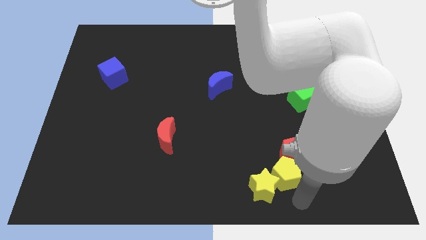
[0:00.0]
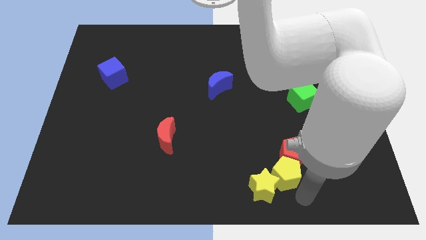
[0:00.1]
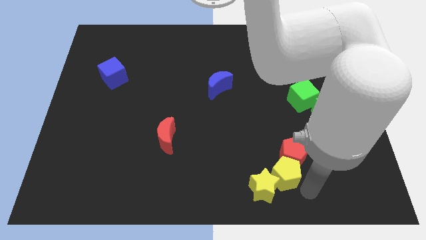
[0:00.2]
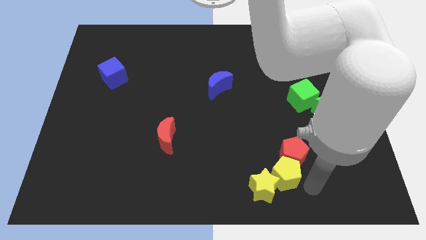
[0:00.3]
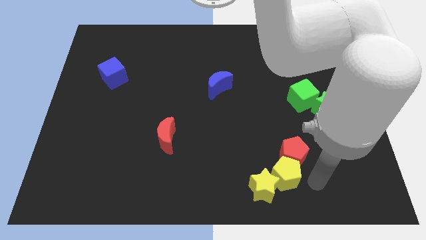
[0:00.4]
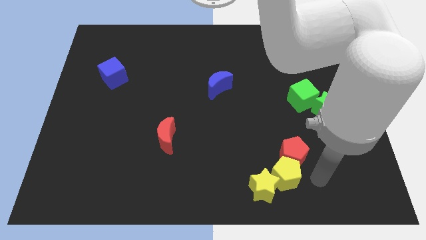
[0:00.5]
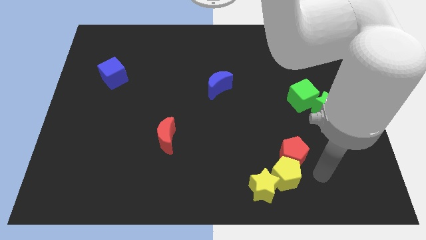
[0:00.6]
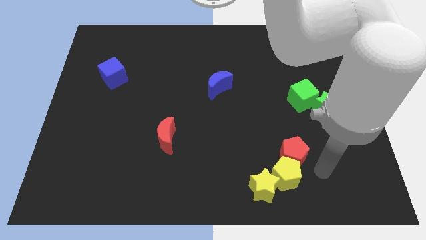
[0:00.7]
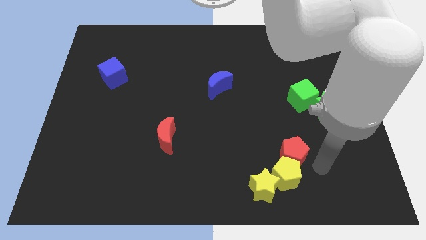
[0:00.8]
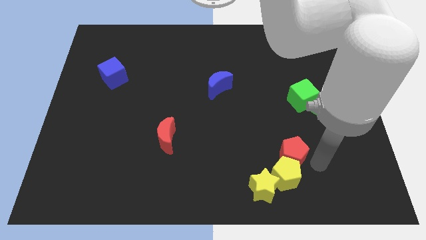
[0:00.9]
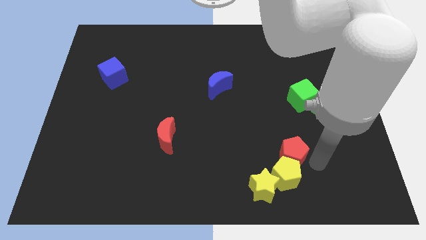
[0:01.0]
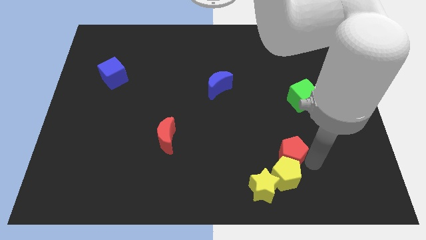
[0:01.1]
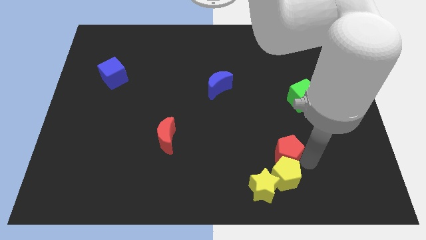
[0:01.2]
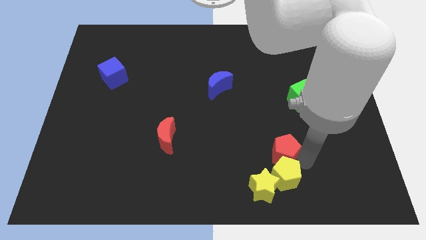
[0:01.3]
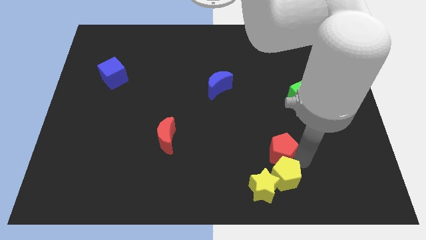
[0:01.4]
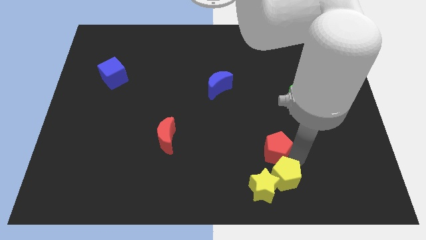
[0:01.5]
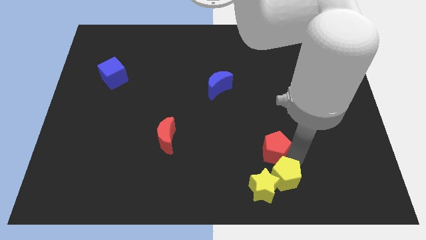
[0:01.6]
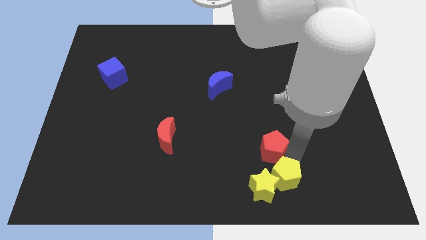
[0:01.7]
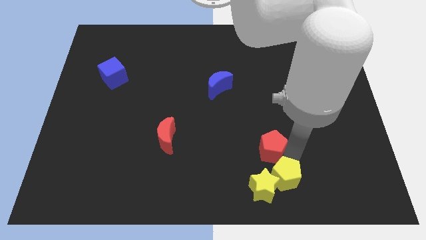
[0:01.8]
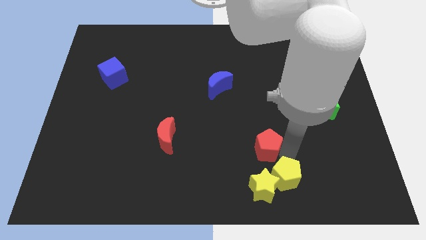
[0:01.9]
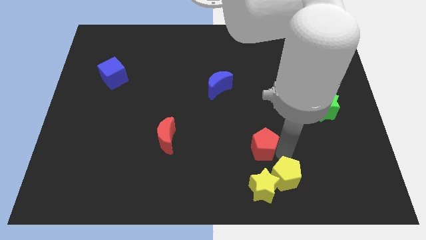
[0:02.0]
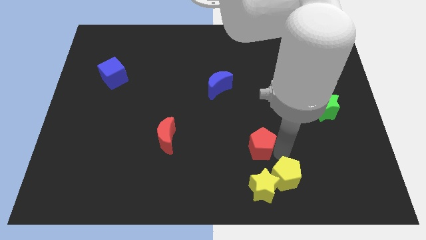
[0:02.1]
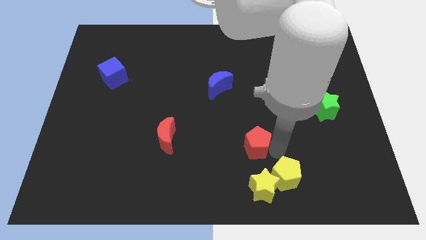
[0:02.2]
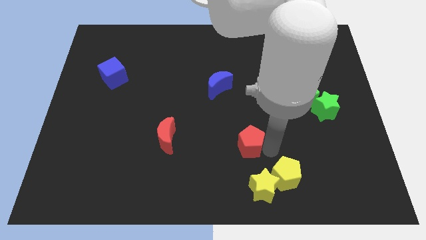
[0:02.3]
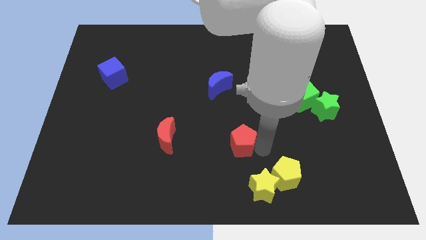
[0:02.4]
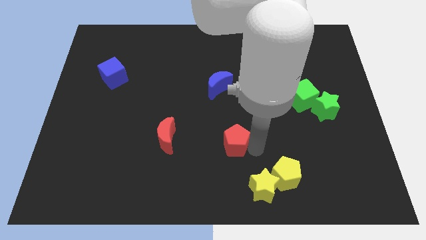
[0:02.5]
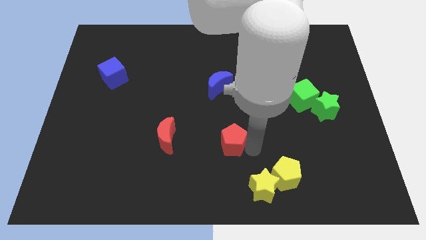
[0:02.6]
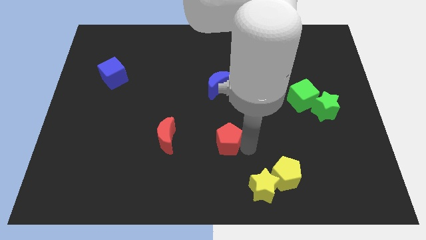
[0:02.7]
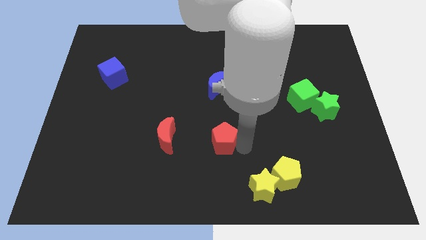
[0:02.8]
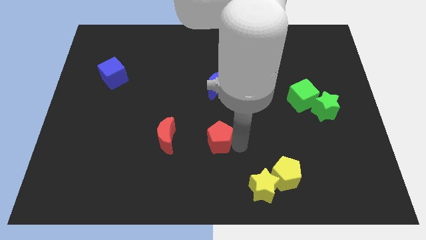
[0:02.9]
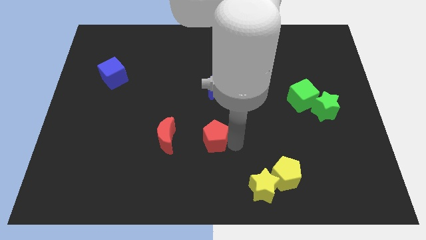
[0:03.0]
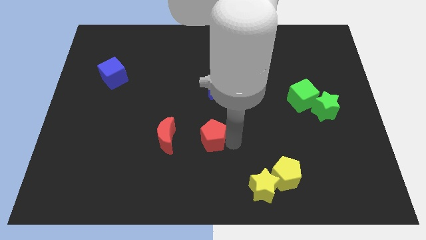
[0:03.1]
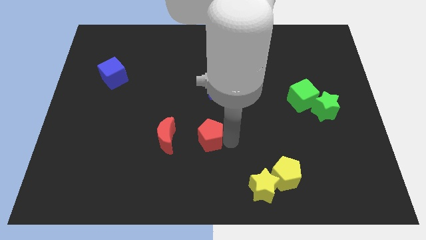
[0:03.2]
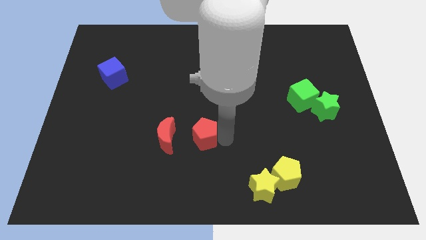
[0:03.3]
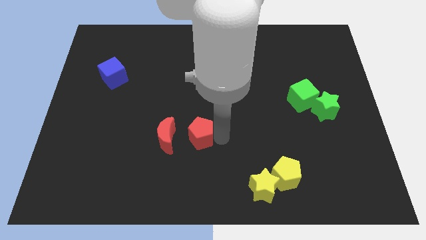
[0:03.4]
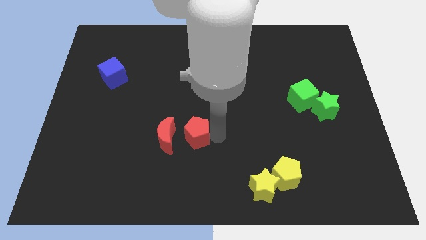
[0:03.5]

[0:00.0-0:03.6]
move the red pentagon apart from the yellow pentagon

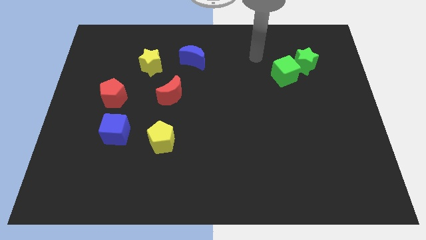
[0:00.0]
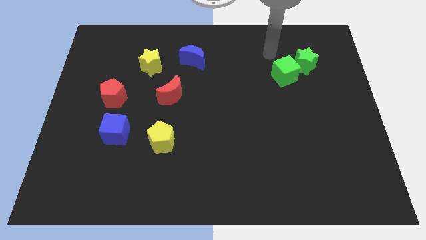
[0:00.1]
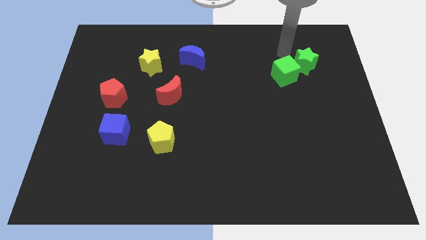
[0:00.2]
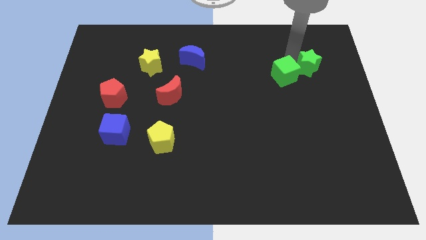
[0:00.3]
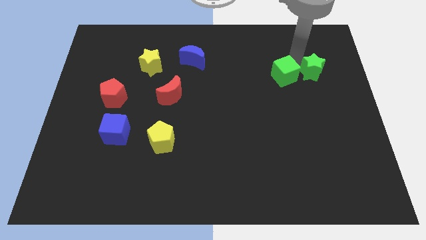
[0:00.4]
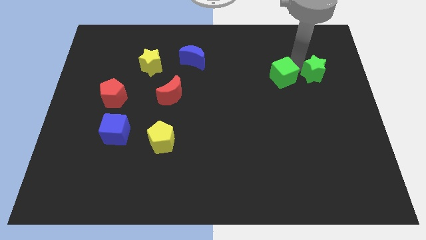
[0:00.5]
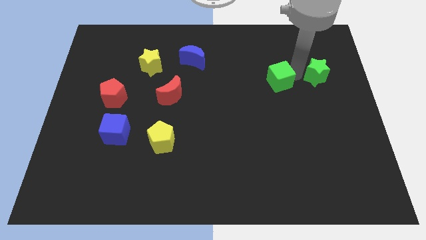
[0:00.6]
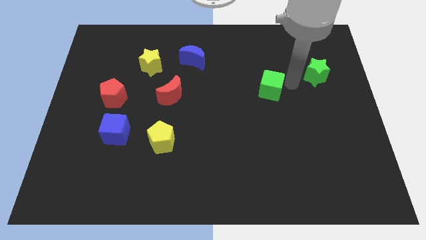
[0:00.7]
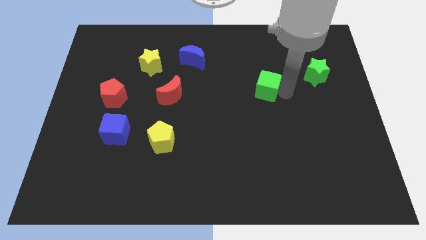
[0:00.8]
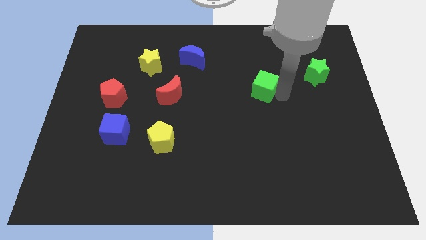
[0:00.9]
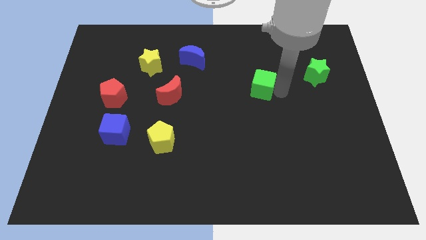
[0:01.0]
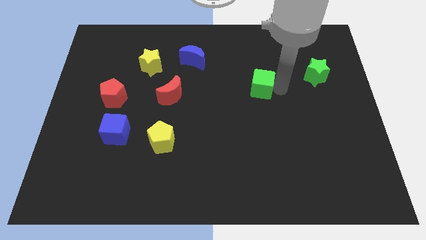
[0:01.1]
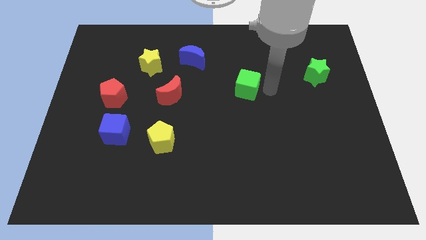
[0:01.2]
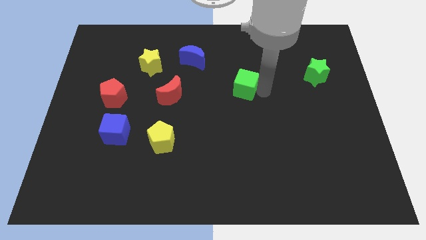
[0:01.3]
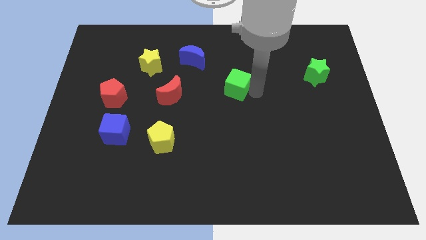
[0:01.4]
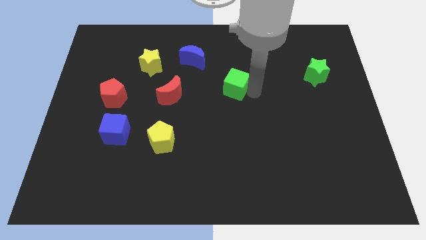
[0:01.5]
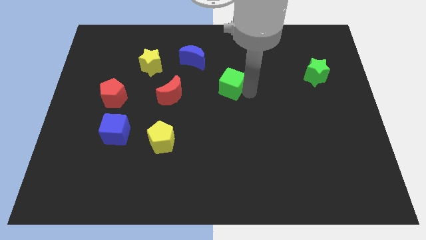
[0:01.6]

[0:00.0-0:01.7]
seperate the green cube and green star away from each other

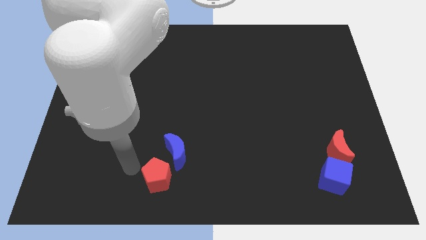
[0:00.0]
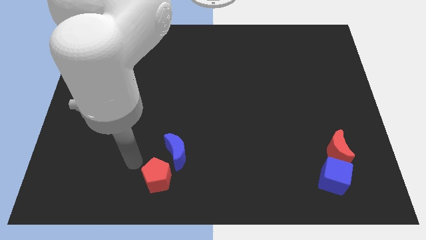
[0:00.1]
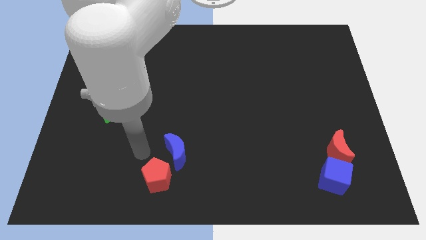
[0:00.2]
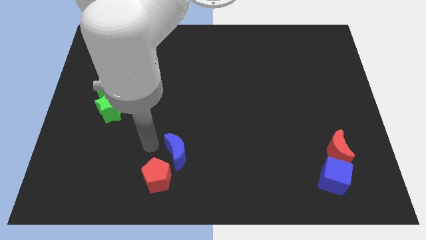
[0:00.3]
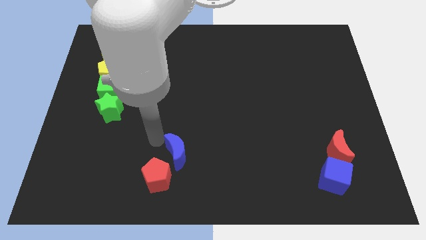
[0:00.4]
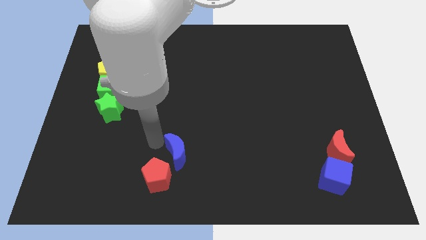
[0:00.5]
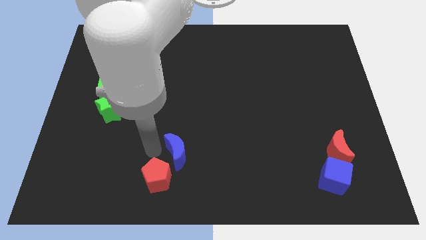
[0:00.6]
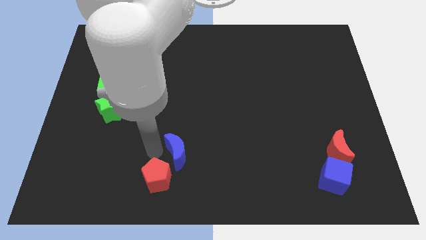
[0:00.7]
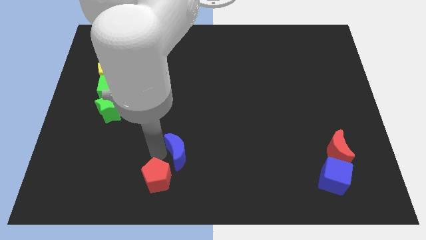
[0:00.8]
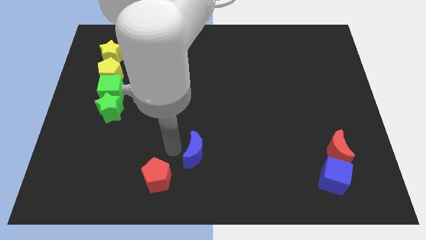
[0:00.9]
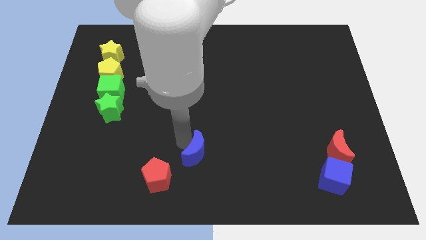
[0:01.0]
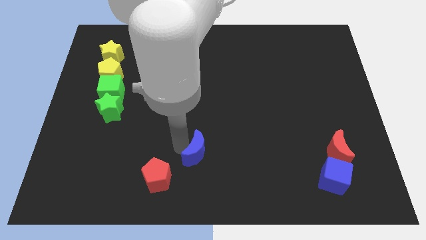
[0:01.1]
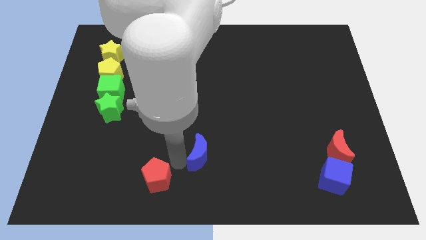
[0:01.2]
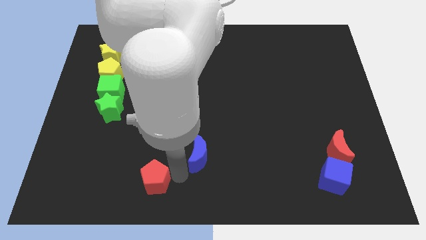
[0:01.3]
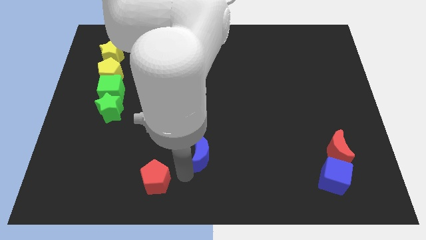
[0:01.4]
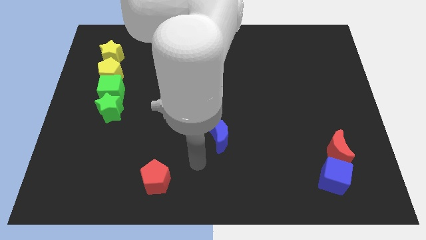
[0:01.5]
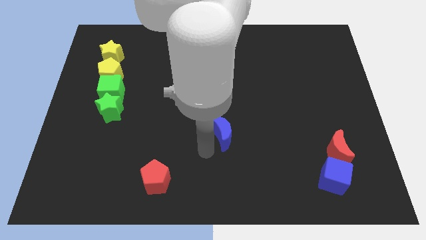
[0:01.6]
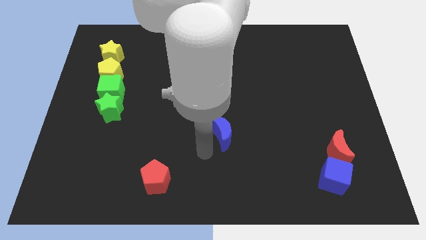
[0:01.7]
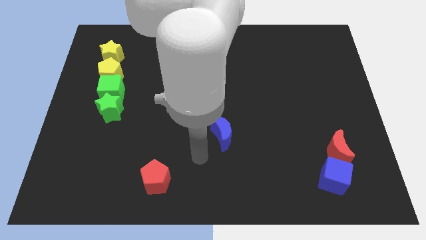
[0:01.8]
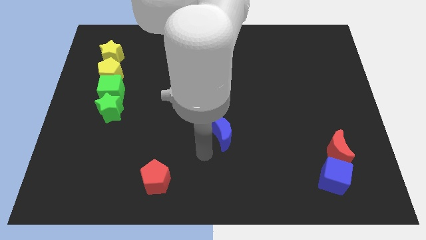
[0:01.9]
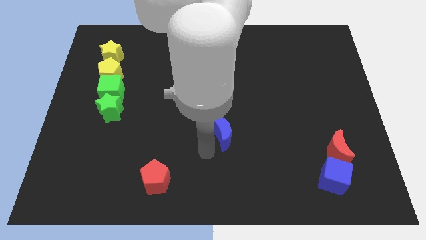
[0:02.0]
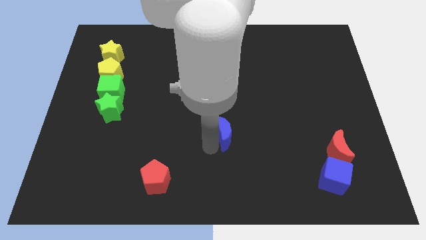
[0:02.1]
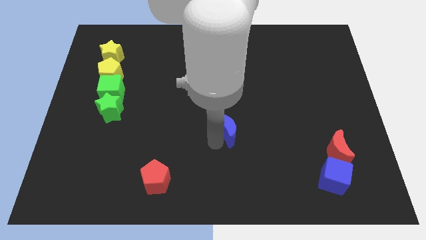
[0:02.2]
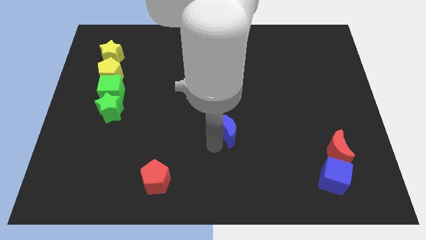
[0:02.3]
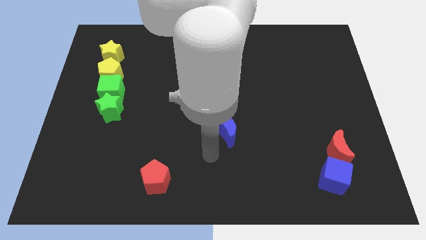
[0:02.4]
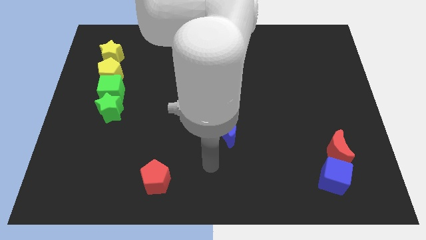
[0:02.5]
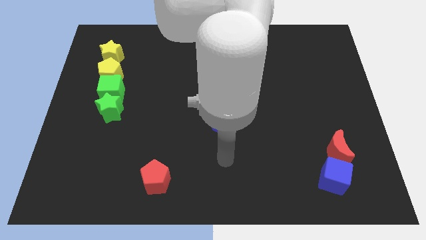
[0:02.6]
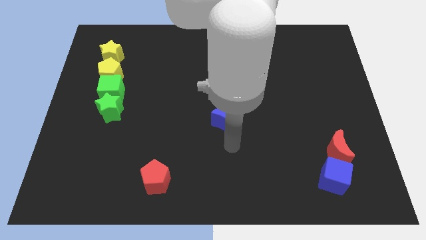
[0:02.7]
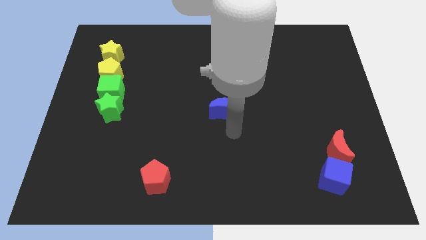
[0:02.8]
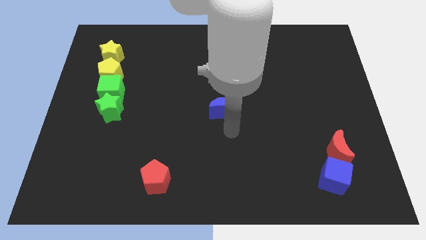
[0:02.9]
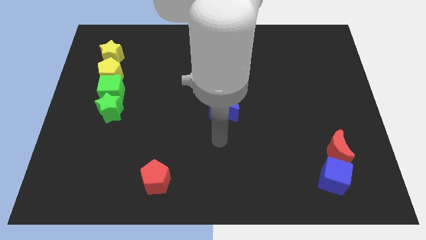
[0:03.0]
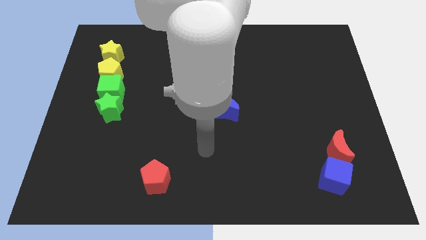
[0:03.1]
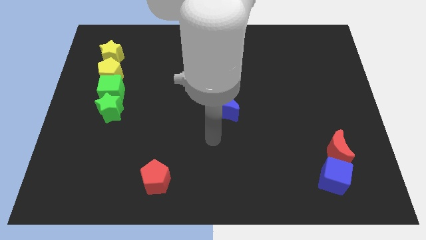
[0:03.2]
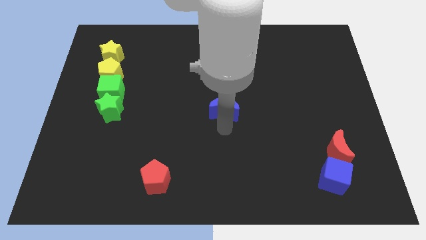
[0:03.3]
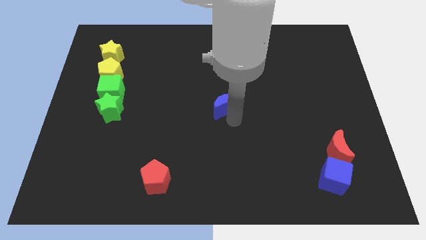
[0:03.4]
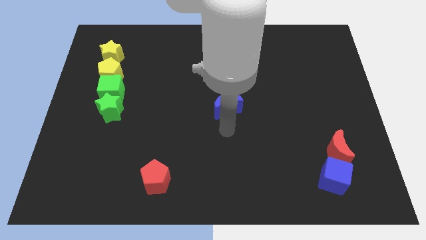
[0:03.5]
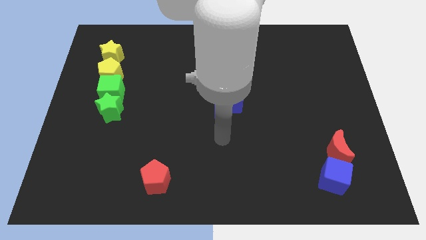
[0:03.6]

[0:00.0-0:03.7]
move the blue moon to the center of the board
